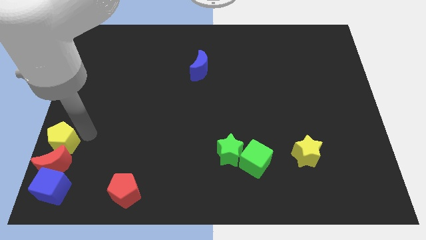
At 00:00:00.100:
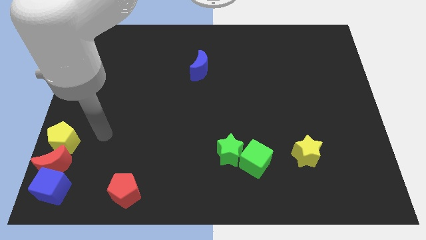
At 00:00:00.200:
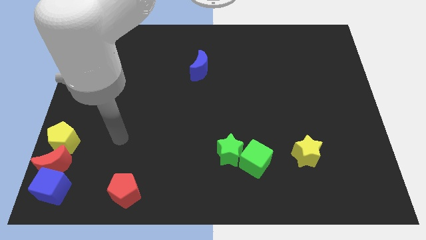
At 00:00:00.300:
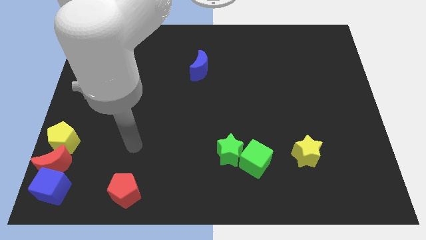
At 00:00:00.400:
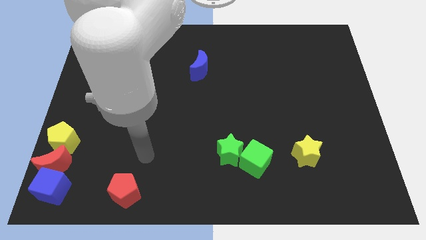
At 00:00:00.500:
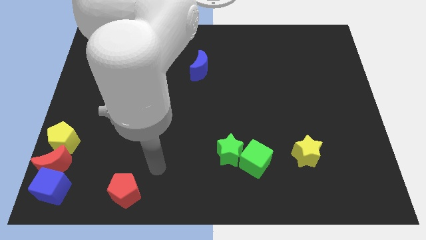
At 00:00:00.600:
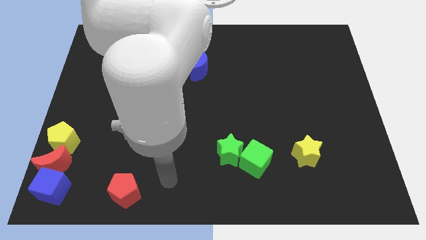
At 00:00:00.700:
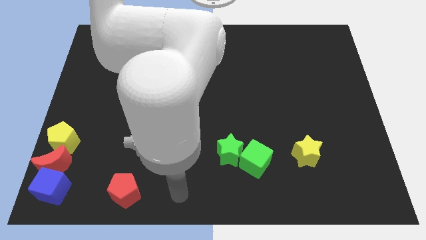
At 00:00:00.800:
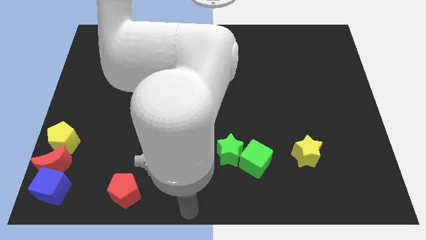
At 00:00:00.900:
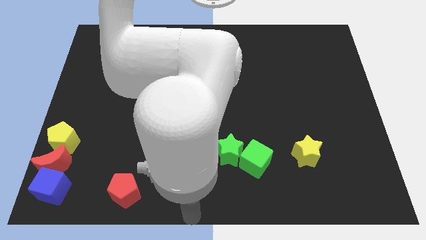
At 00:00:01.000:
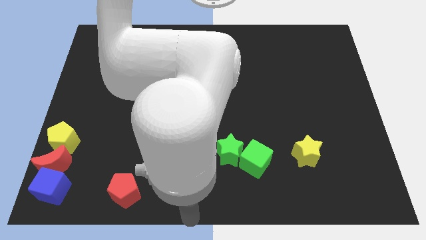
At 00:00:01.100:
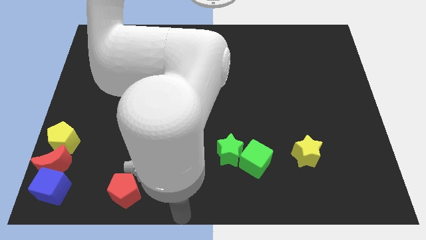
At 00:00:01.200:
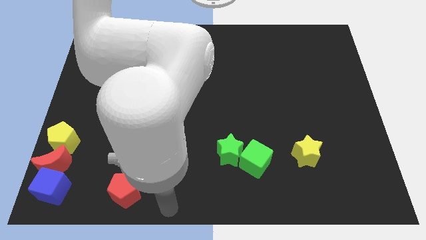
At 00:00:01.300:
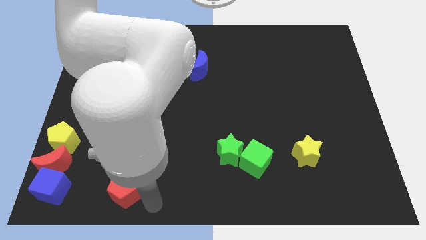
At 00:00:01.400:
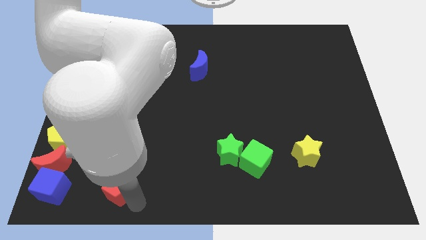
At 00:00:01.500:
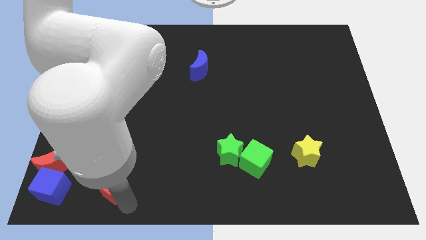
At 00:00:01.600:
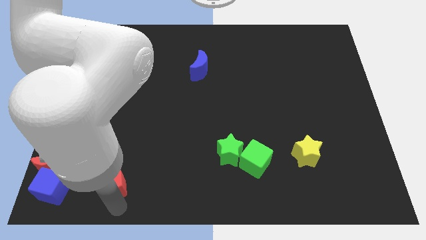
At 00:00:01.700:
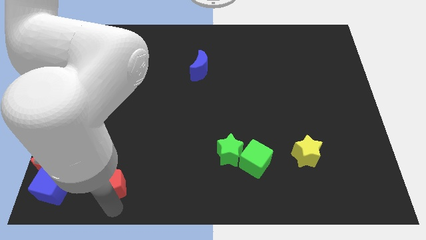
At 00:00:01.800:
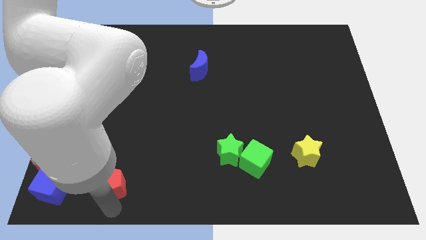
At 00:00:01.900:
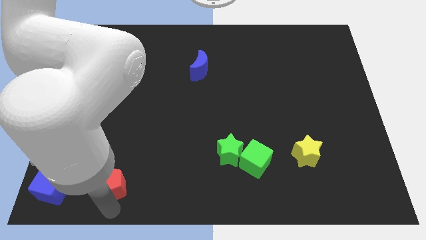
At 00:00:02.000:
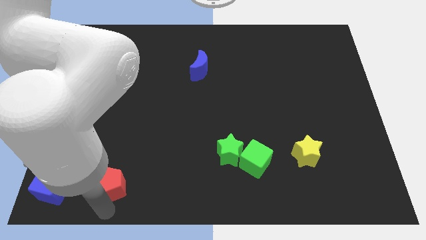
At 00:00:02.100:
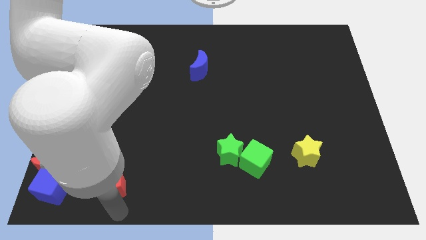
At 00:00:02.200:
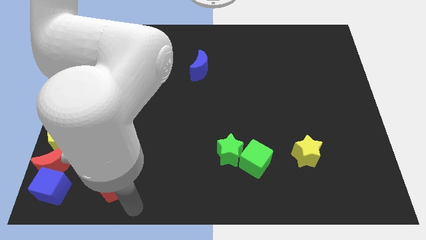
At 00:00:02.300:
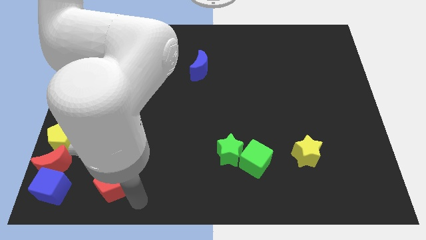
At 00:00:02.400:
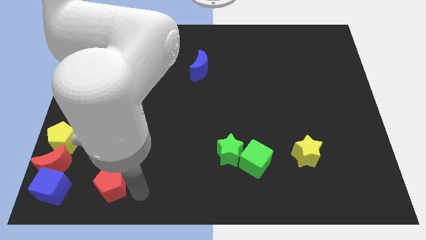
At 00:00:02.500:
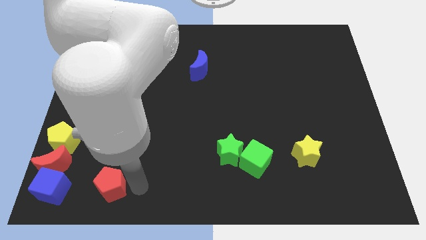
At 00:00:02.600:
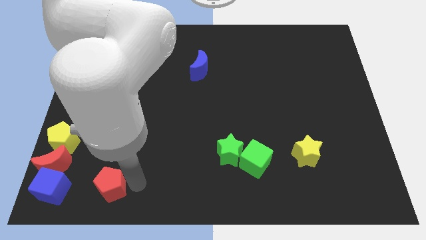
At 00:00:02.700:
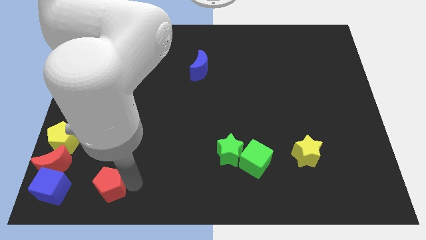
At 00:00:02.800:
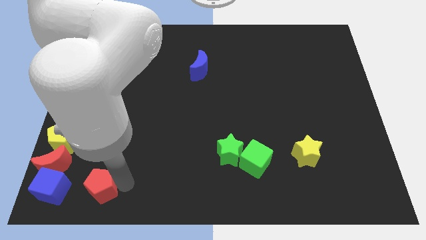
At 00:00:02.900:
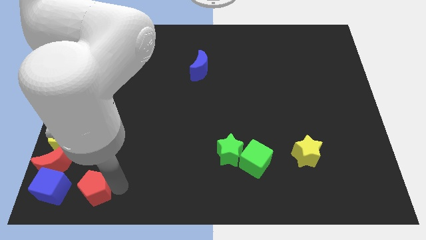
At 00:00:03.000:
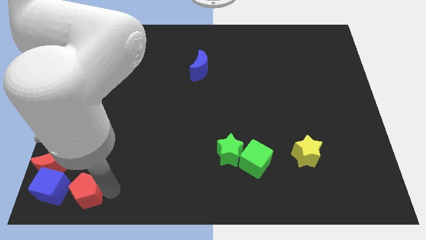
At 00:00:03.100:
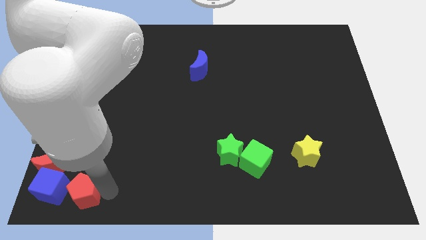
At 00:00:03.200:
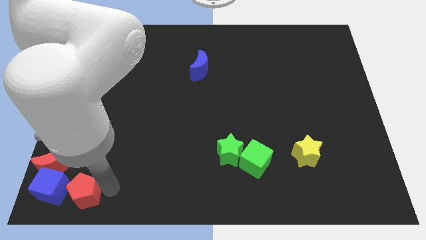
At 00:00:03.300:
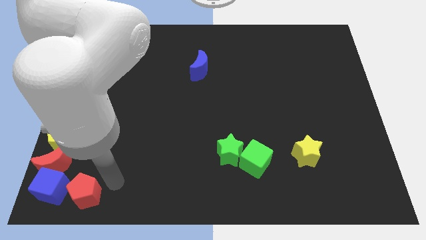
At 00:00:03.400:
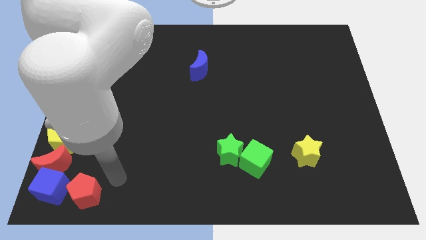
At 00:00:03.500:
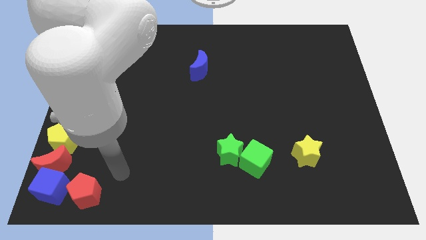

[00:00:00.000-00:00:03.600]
move red pentagon to the right of blue cube

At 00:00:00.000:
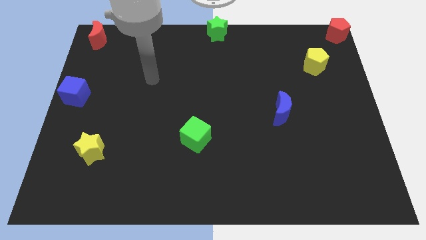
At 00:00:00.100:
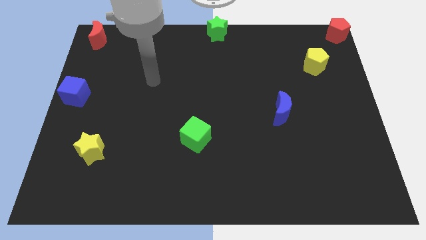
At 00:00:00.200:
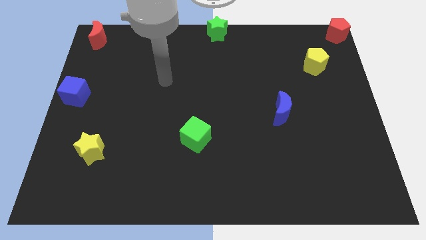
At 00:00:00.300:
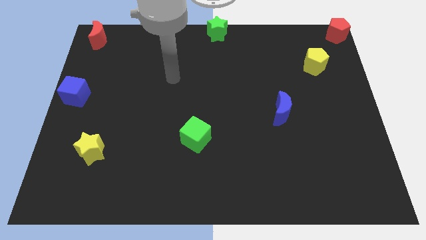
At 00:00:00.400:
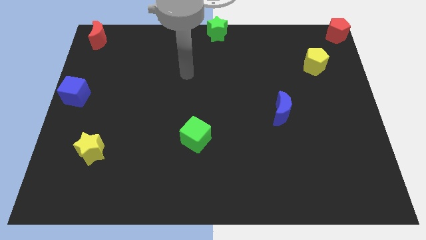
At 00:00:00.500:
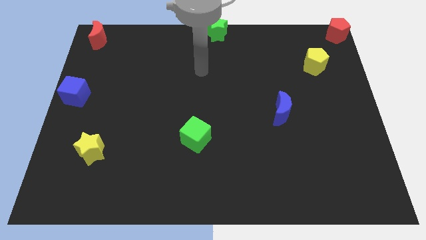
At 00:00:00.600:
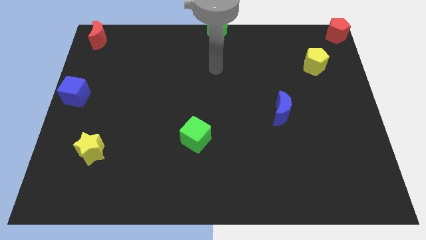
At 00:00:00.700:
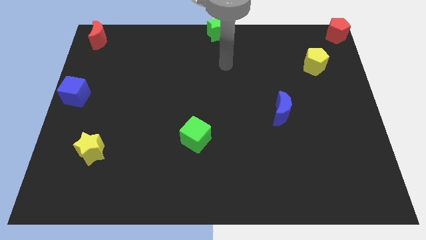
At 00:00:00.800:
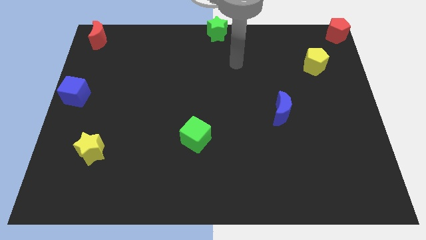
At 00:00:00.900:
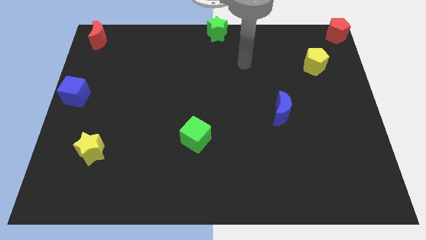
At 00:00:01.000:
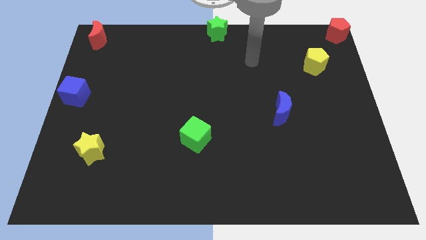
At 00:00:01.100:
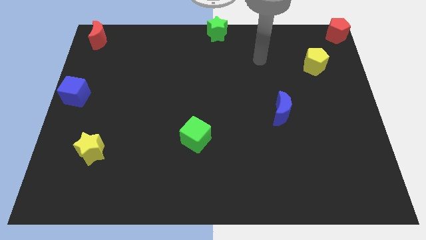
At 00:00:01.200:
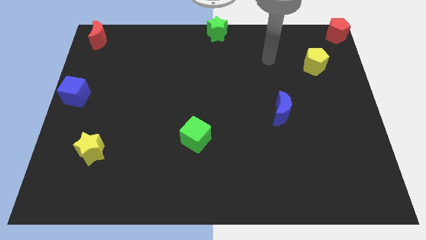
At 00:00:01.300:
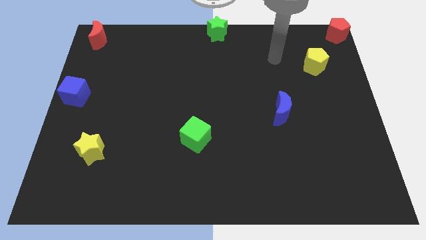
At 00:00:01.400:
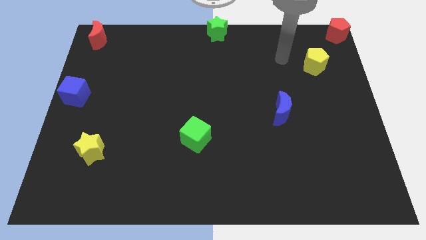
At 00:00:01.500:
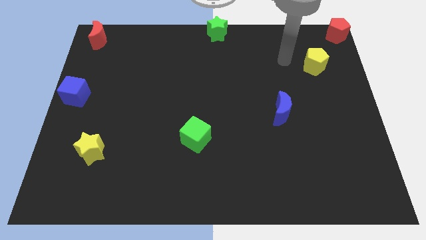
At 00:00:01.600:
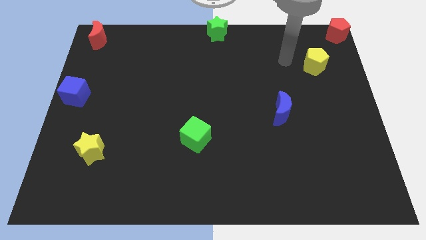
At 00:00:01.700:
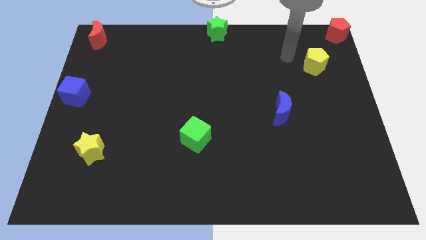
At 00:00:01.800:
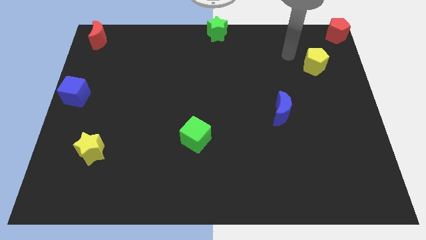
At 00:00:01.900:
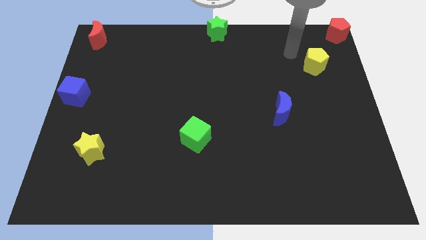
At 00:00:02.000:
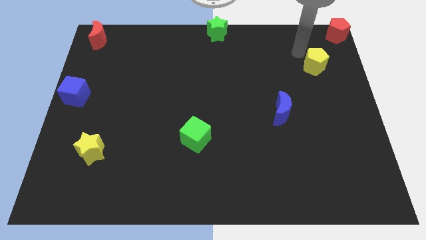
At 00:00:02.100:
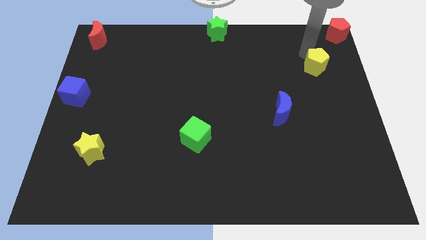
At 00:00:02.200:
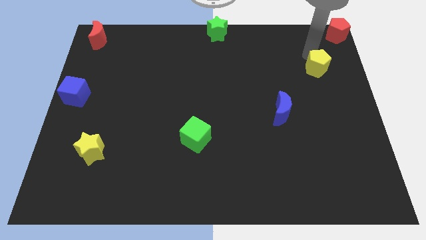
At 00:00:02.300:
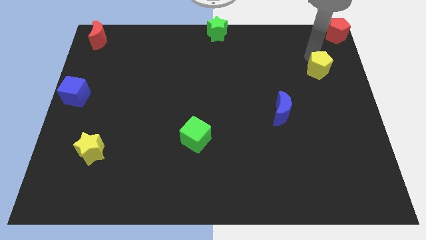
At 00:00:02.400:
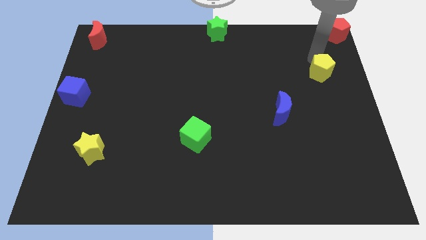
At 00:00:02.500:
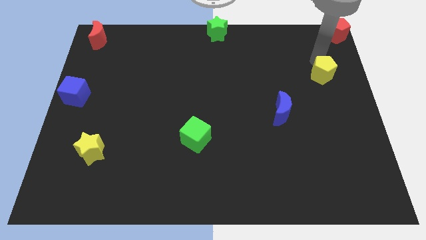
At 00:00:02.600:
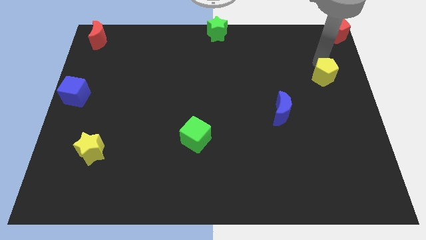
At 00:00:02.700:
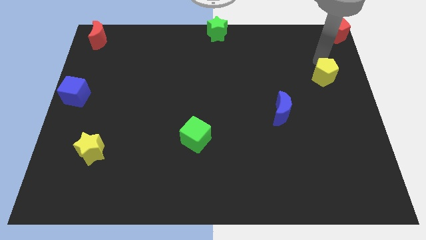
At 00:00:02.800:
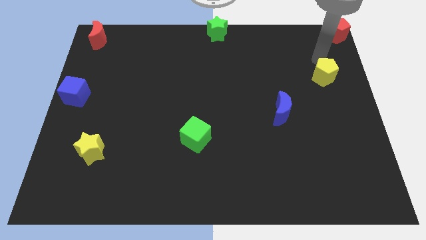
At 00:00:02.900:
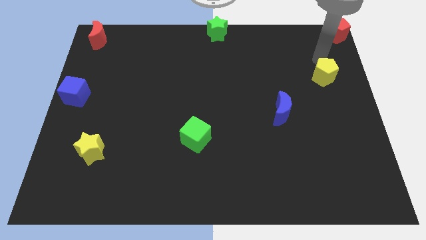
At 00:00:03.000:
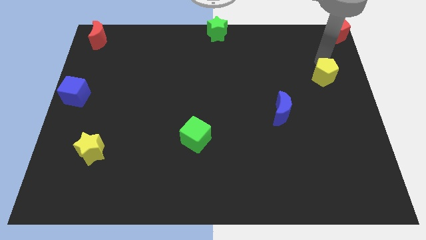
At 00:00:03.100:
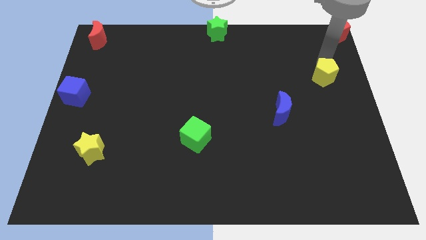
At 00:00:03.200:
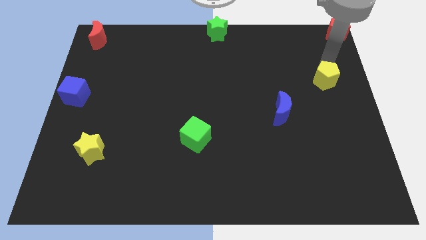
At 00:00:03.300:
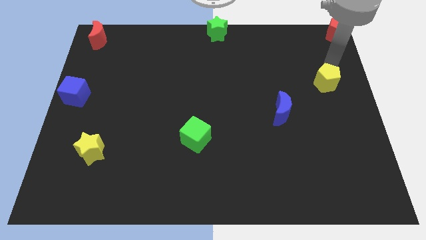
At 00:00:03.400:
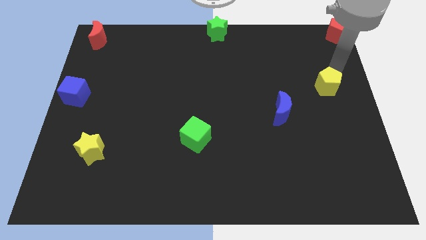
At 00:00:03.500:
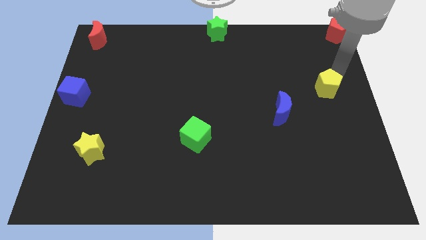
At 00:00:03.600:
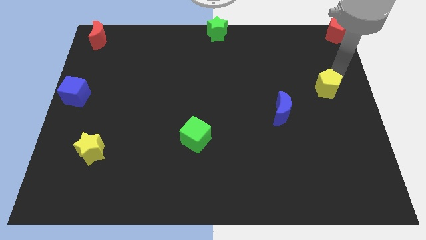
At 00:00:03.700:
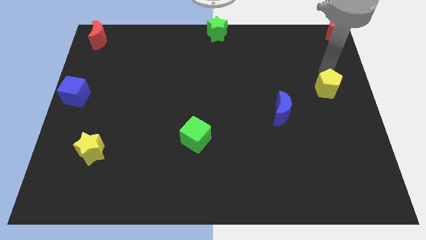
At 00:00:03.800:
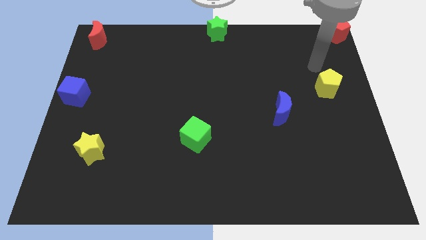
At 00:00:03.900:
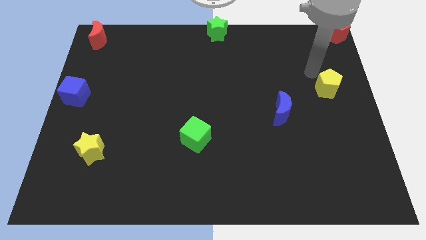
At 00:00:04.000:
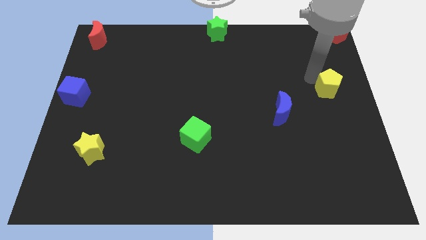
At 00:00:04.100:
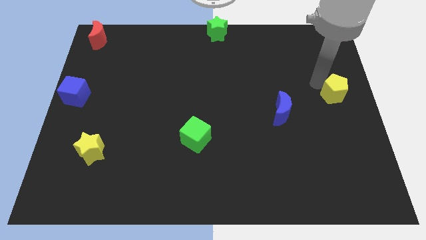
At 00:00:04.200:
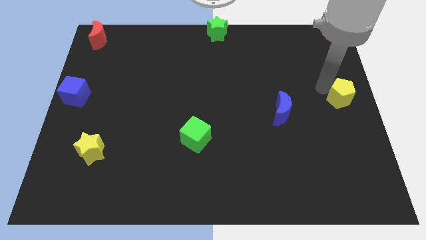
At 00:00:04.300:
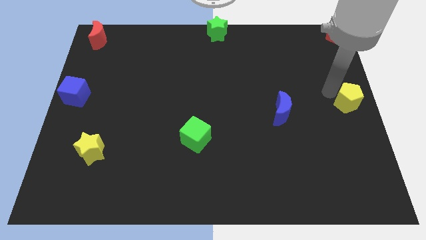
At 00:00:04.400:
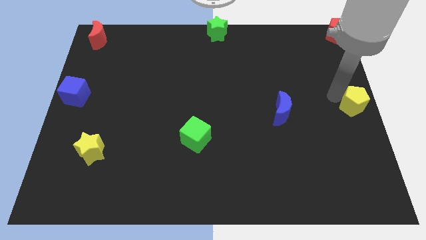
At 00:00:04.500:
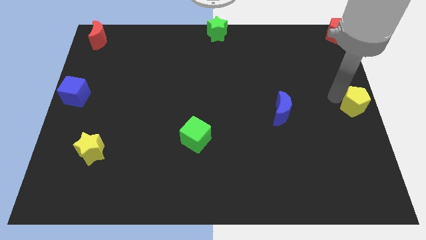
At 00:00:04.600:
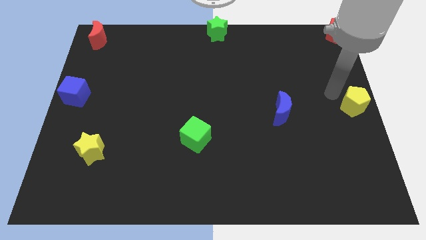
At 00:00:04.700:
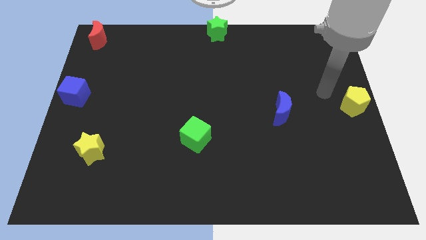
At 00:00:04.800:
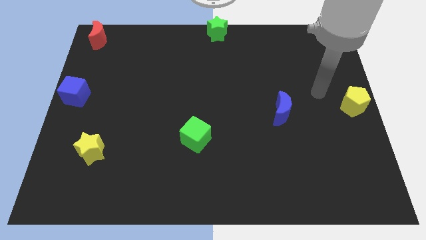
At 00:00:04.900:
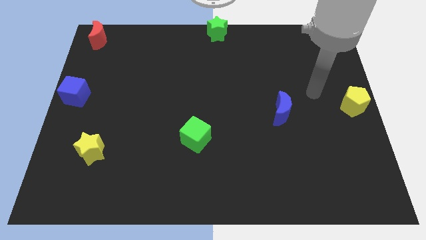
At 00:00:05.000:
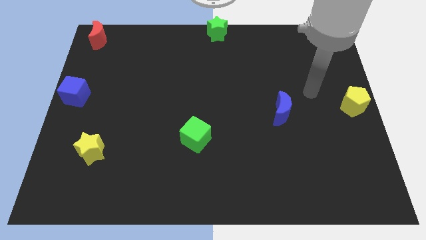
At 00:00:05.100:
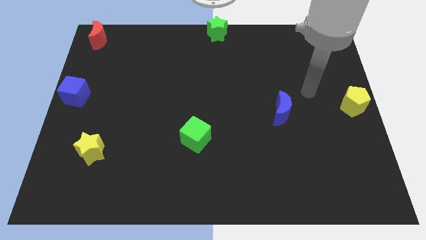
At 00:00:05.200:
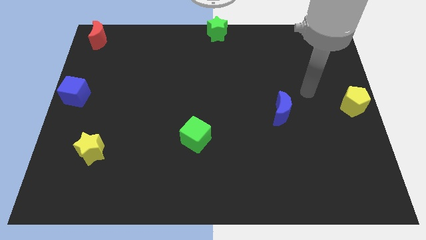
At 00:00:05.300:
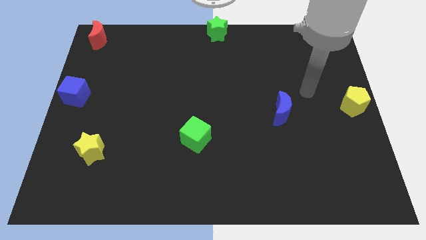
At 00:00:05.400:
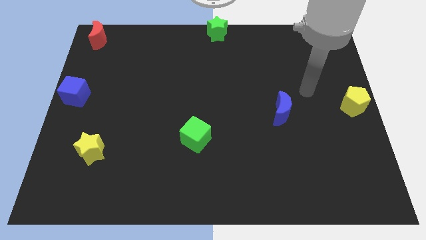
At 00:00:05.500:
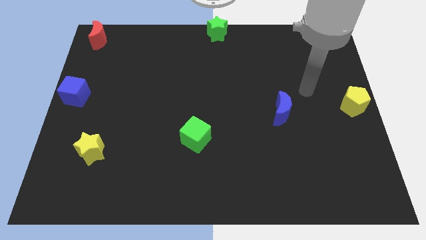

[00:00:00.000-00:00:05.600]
move the yellow pentagon to the right center of the board
